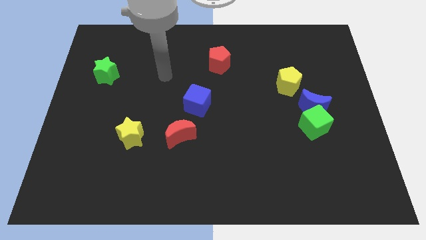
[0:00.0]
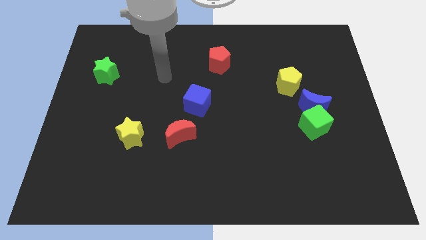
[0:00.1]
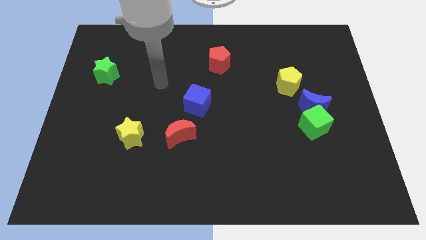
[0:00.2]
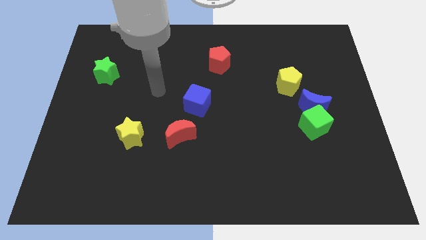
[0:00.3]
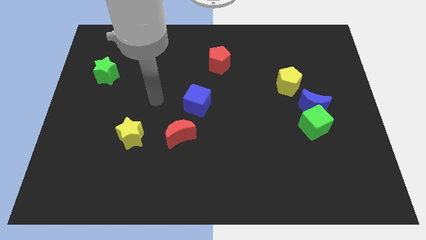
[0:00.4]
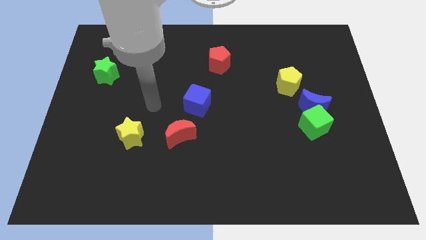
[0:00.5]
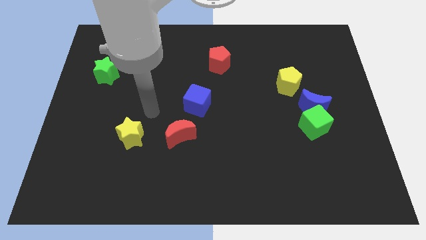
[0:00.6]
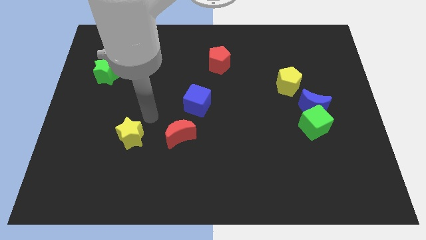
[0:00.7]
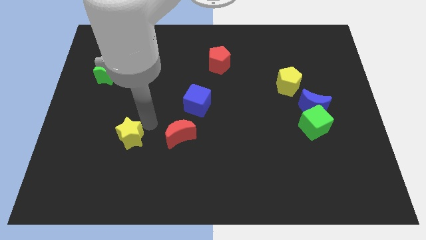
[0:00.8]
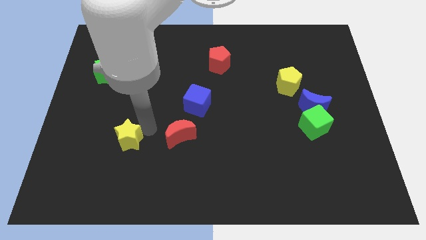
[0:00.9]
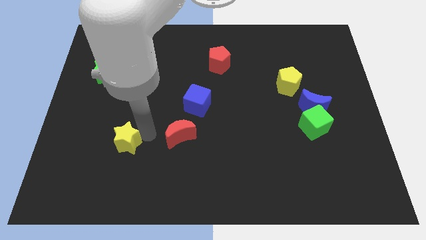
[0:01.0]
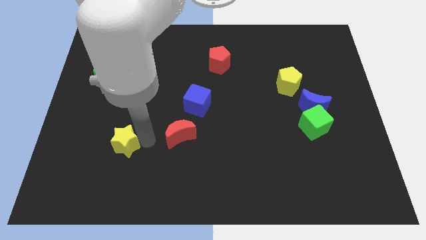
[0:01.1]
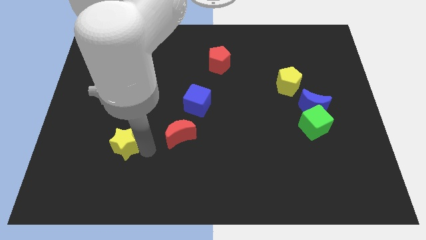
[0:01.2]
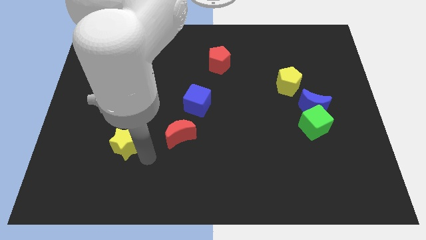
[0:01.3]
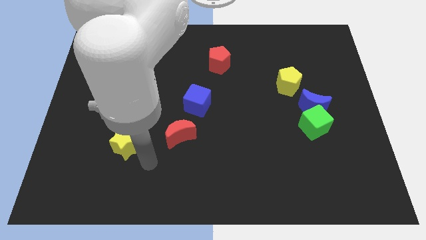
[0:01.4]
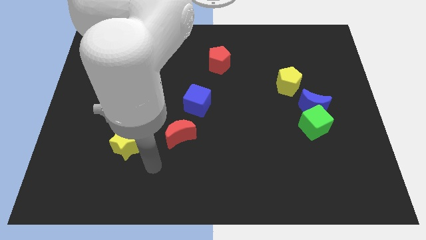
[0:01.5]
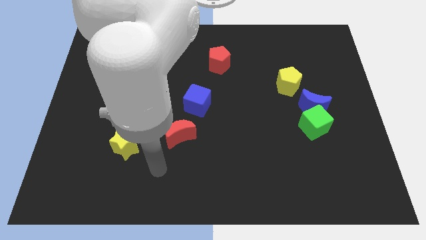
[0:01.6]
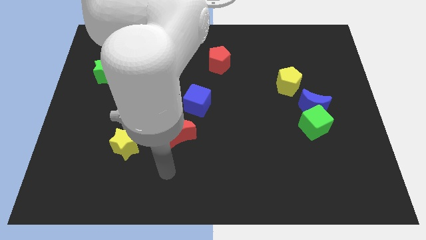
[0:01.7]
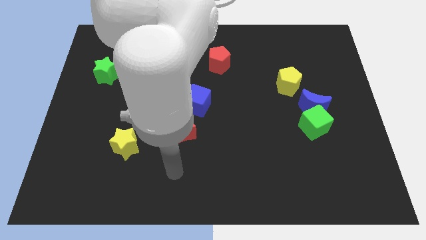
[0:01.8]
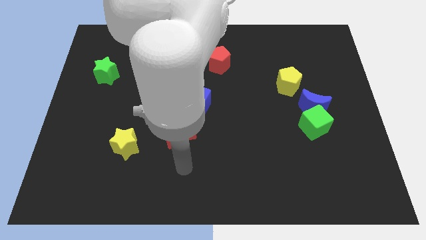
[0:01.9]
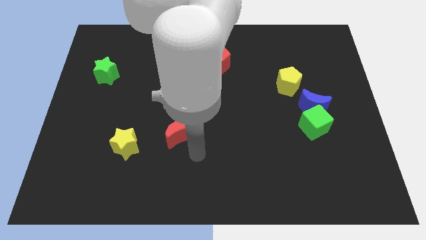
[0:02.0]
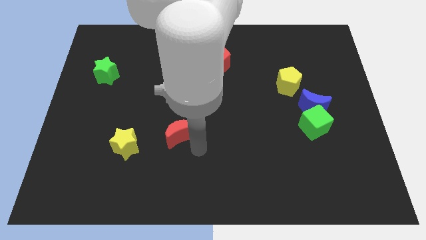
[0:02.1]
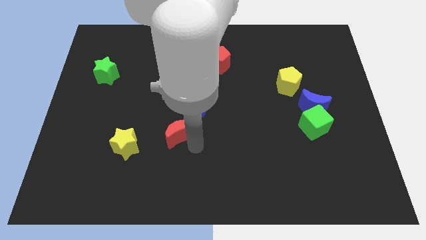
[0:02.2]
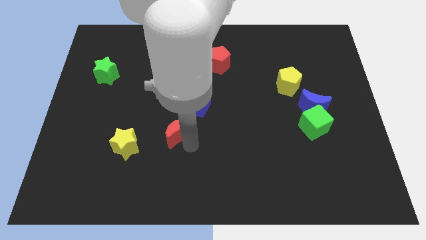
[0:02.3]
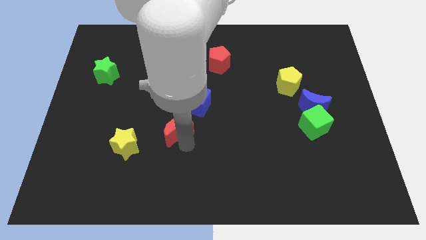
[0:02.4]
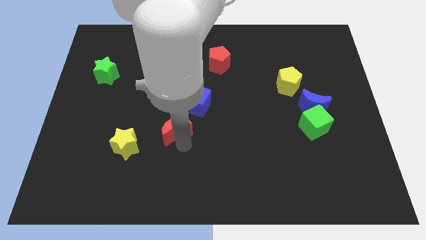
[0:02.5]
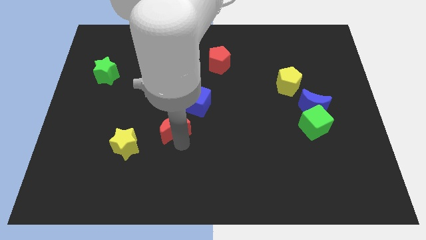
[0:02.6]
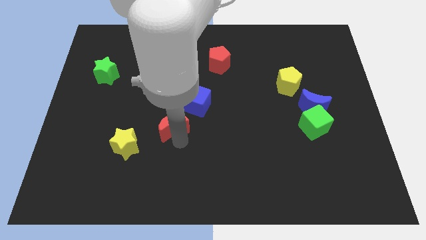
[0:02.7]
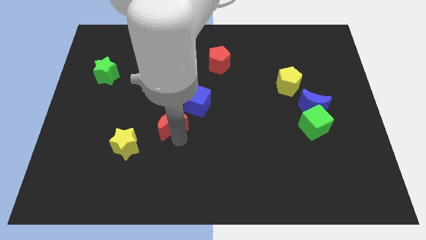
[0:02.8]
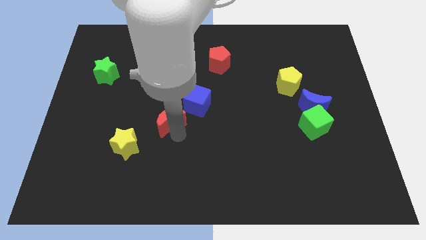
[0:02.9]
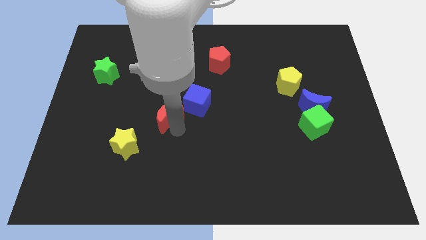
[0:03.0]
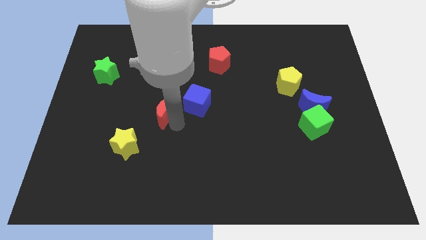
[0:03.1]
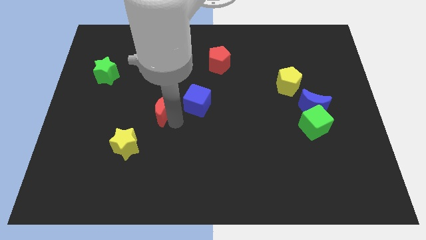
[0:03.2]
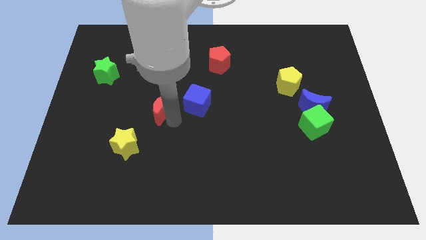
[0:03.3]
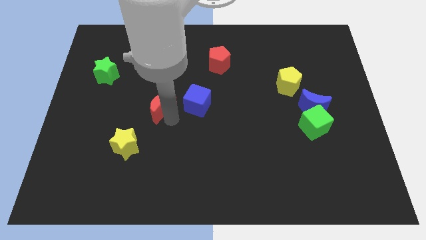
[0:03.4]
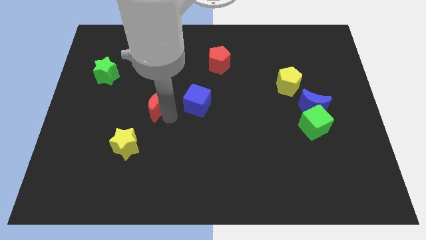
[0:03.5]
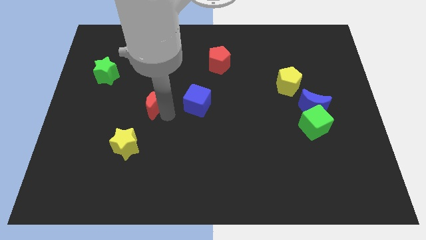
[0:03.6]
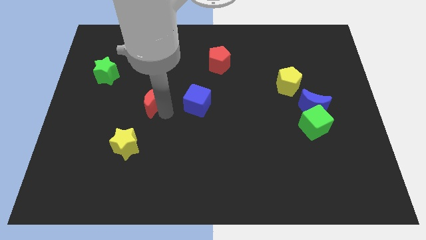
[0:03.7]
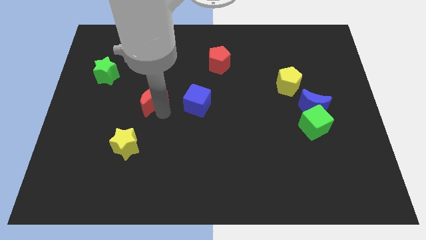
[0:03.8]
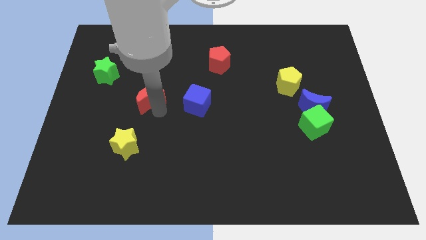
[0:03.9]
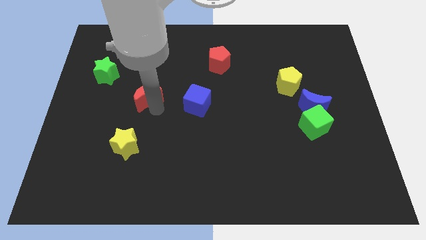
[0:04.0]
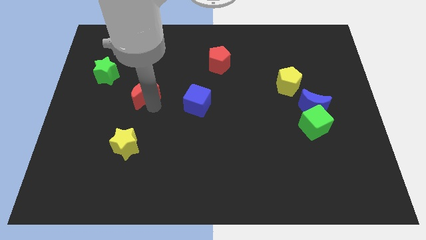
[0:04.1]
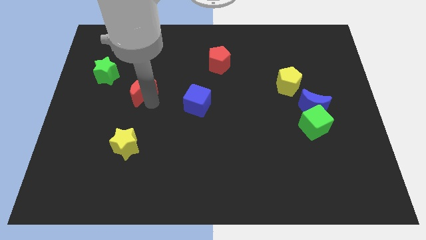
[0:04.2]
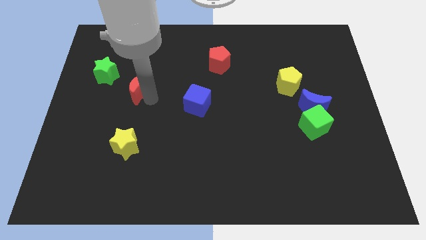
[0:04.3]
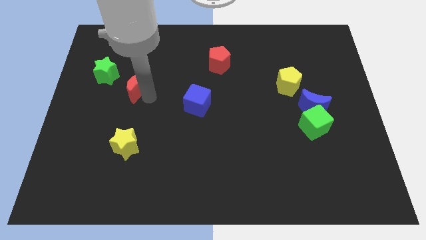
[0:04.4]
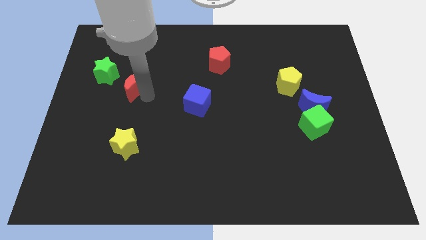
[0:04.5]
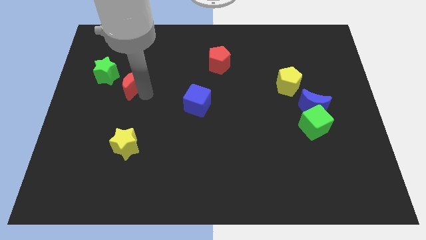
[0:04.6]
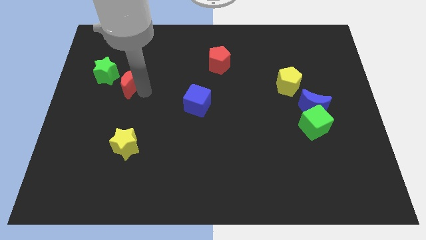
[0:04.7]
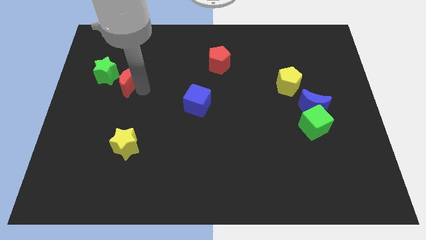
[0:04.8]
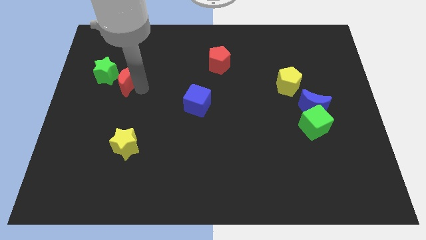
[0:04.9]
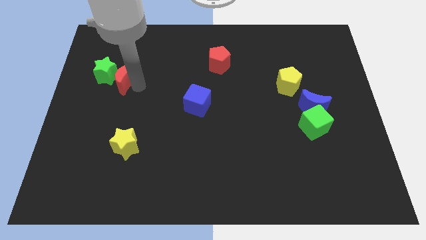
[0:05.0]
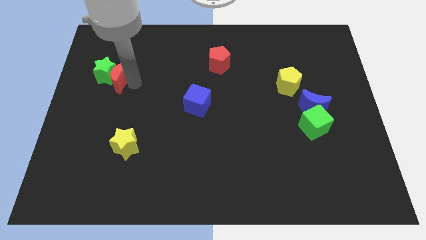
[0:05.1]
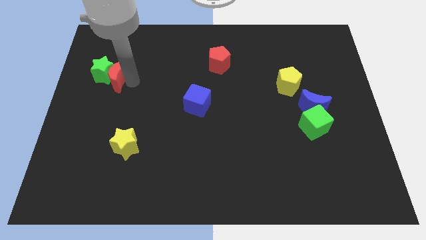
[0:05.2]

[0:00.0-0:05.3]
put the red moon towards the green star

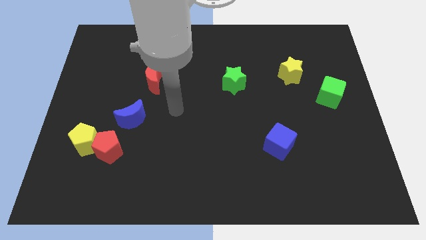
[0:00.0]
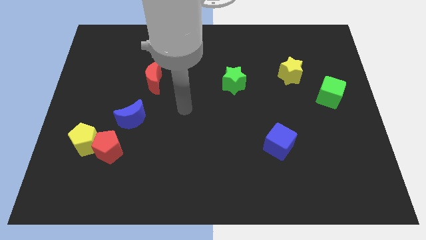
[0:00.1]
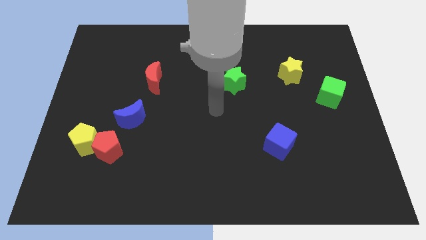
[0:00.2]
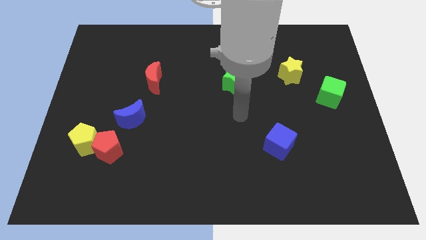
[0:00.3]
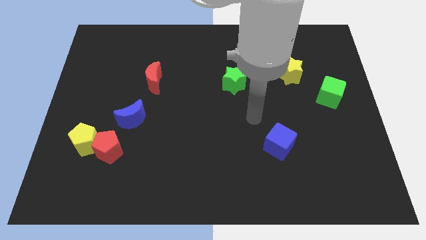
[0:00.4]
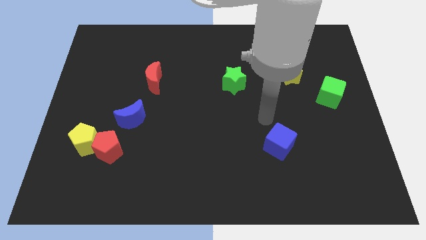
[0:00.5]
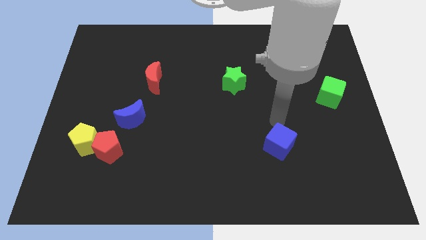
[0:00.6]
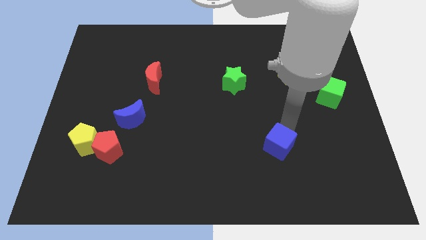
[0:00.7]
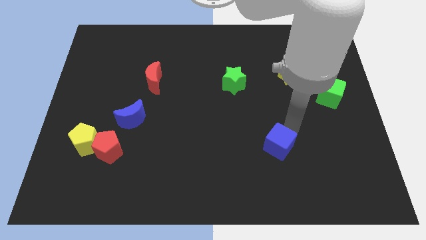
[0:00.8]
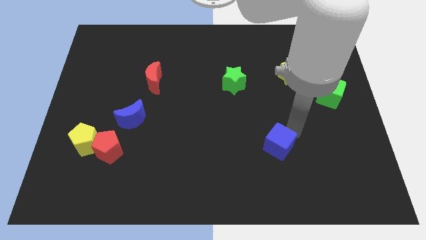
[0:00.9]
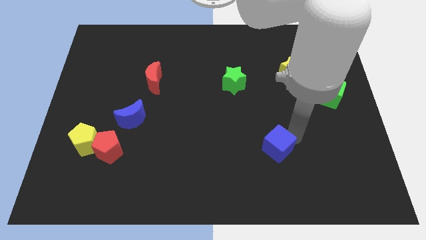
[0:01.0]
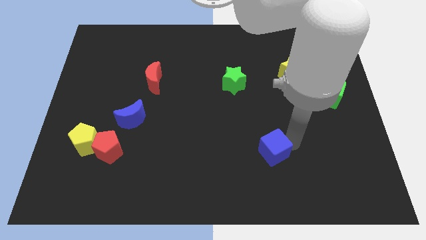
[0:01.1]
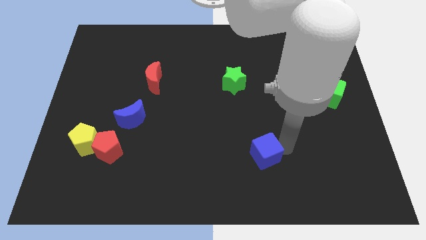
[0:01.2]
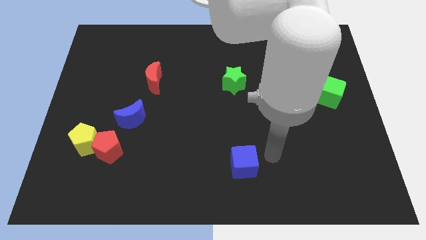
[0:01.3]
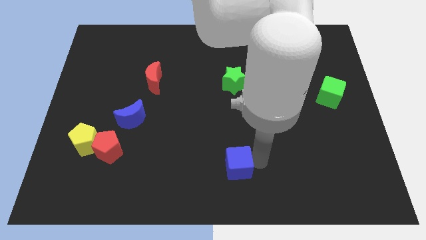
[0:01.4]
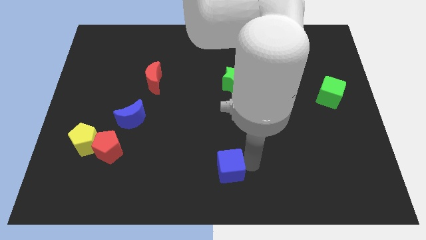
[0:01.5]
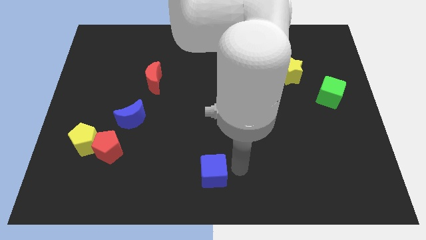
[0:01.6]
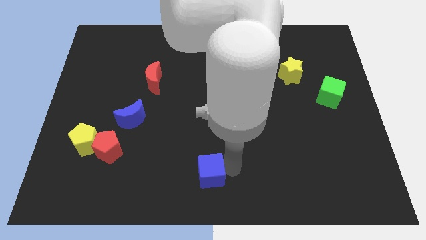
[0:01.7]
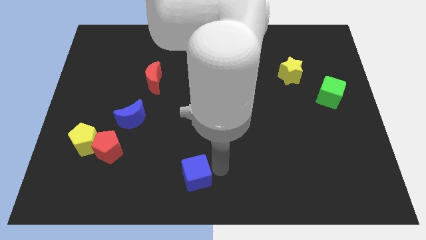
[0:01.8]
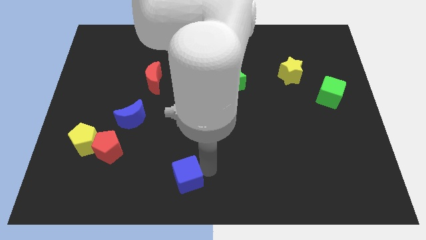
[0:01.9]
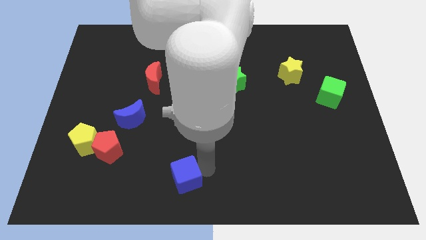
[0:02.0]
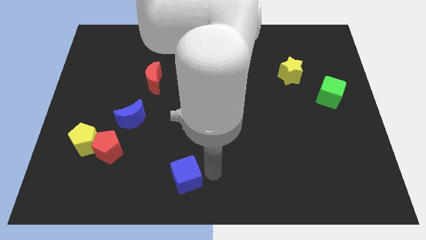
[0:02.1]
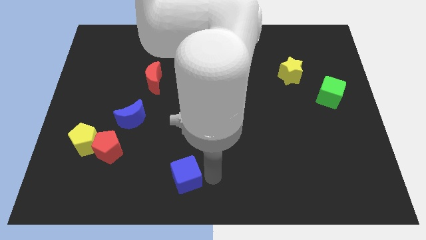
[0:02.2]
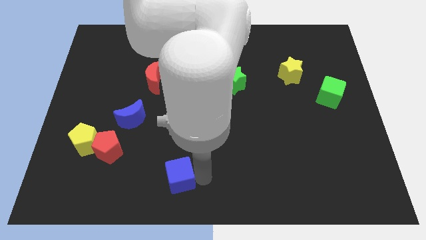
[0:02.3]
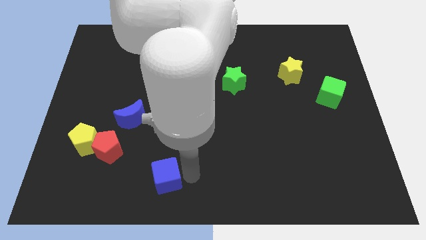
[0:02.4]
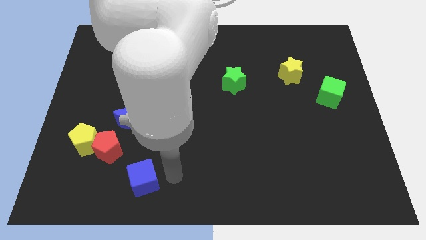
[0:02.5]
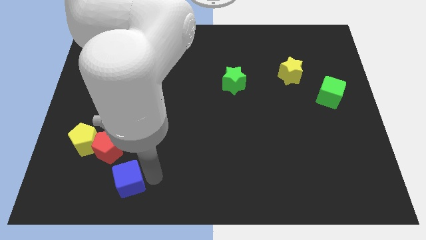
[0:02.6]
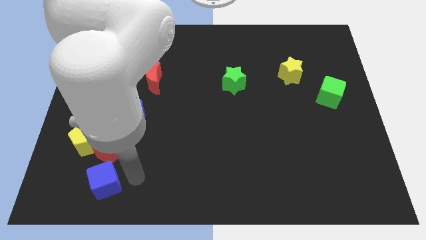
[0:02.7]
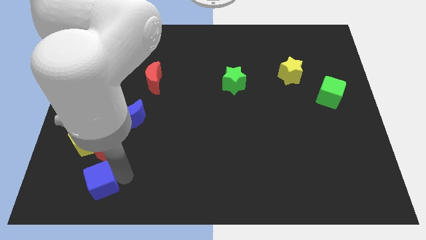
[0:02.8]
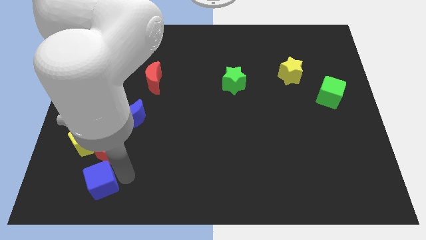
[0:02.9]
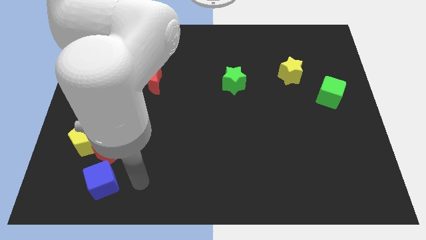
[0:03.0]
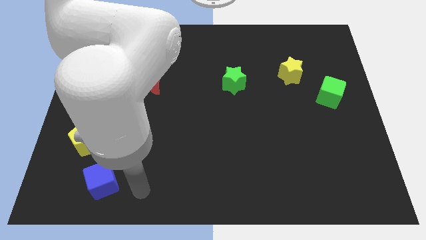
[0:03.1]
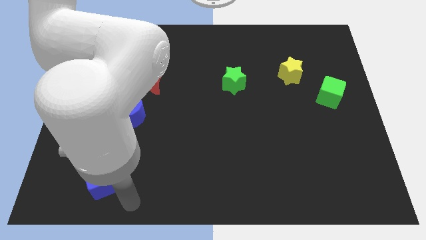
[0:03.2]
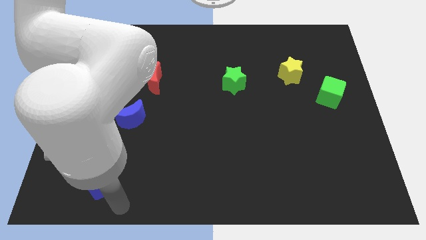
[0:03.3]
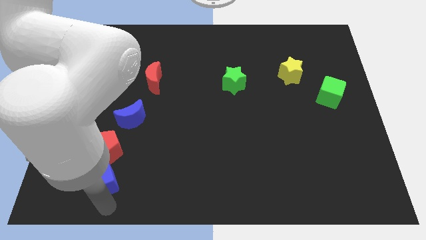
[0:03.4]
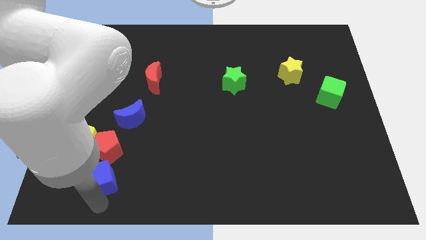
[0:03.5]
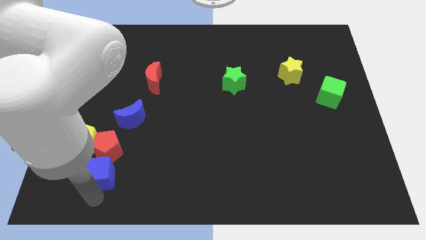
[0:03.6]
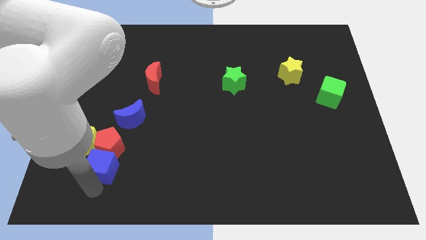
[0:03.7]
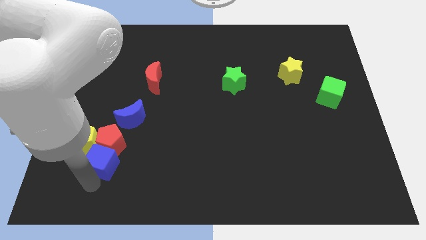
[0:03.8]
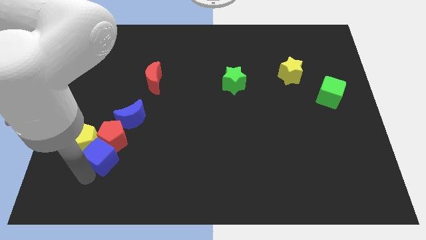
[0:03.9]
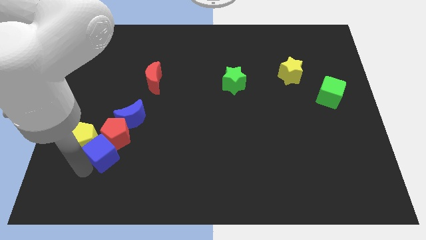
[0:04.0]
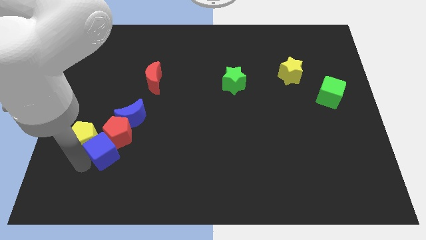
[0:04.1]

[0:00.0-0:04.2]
put the blue cube to the yellow pentagon
